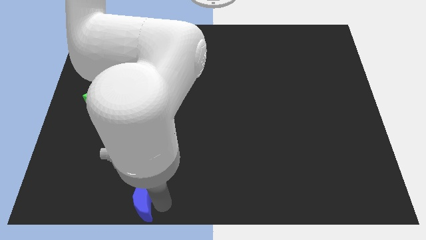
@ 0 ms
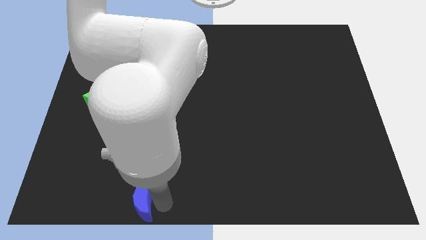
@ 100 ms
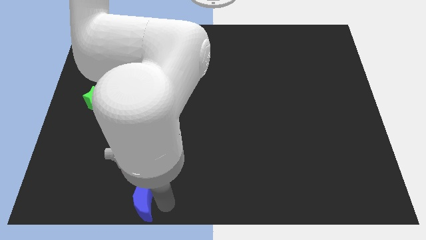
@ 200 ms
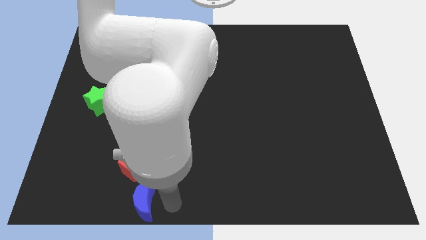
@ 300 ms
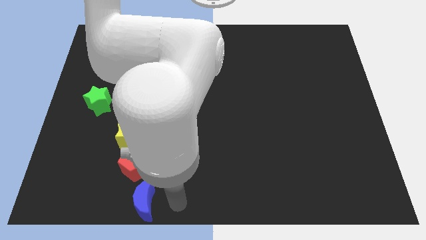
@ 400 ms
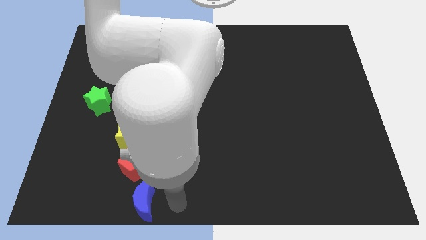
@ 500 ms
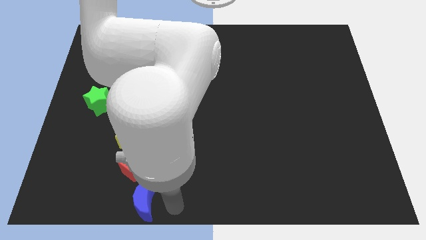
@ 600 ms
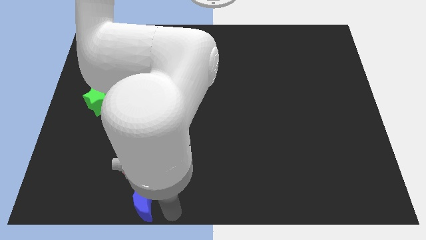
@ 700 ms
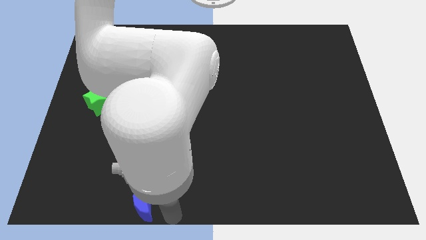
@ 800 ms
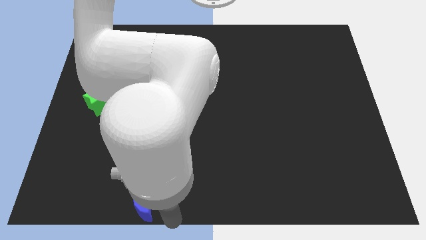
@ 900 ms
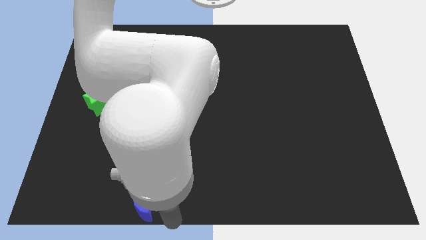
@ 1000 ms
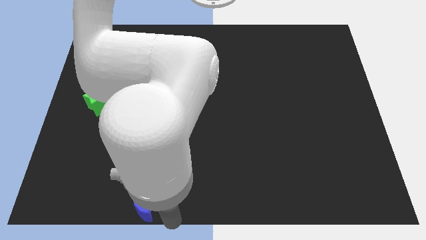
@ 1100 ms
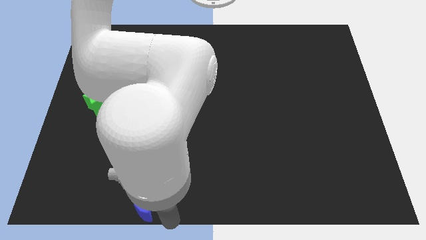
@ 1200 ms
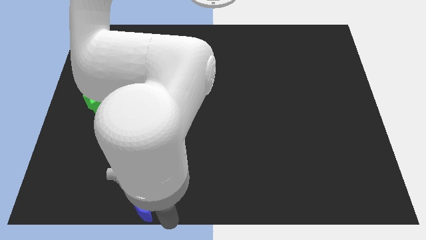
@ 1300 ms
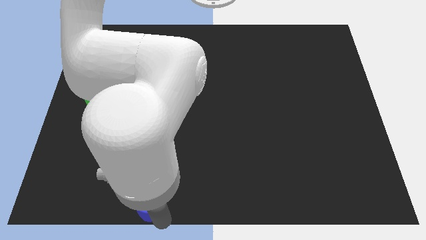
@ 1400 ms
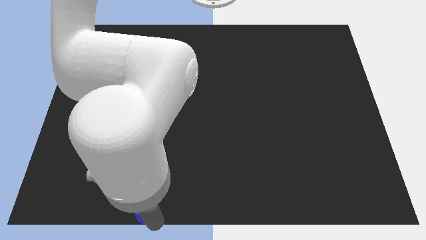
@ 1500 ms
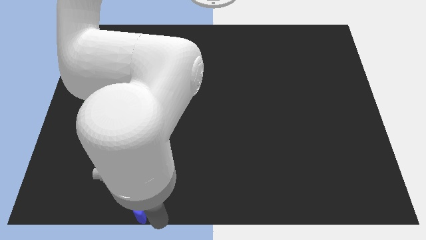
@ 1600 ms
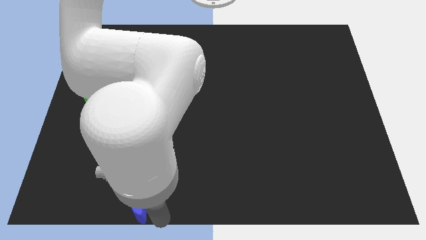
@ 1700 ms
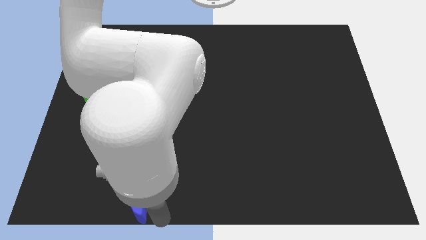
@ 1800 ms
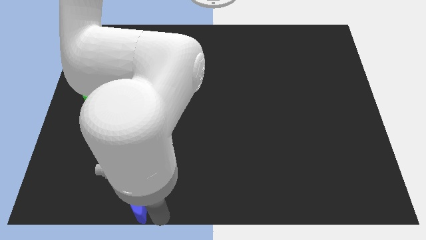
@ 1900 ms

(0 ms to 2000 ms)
place the blue moon to the bottom of the red pentagon

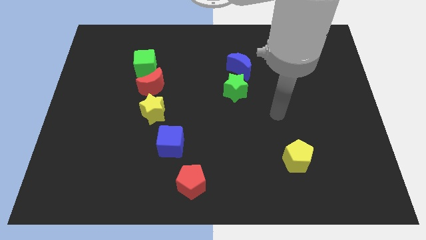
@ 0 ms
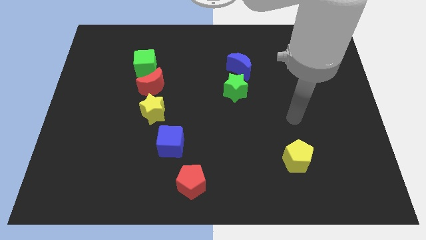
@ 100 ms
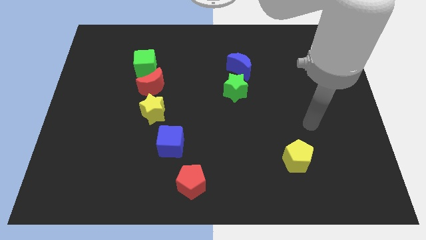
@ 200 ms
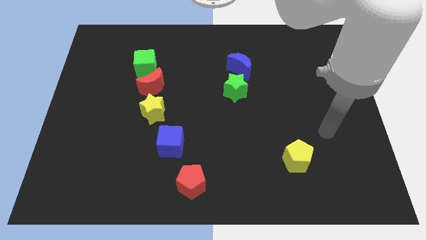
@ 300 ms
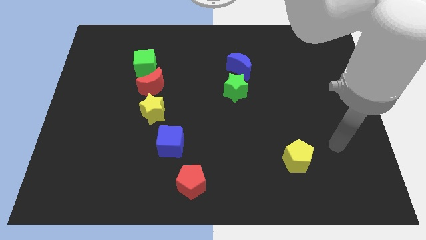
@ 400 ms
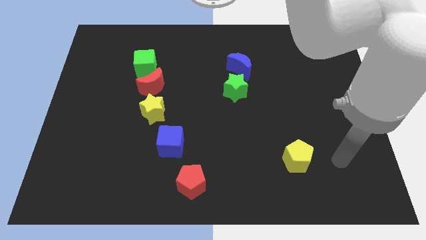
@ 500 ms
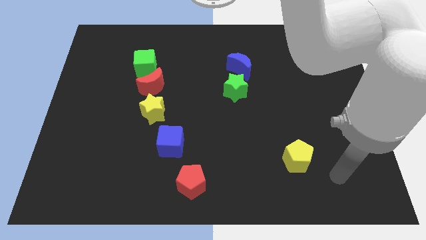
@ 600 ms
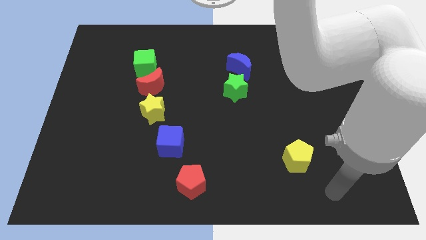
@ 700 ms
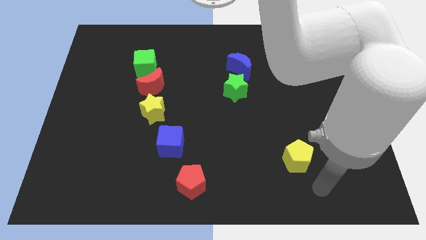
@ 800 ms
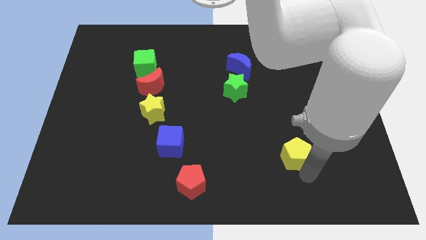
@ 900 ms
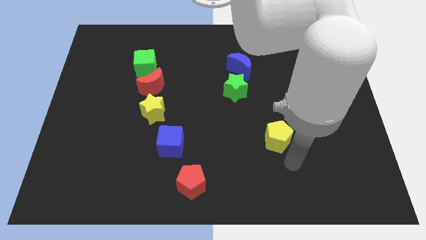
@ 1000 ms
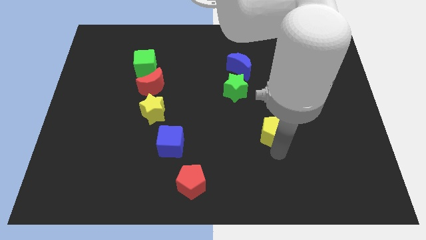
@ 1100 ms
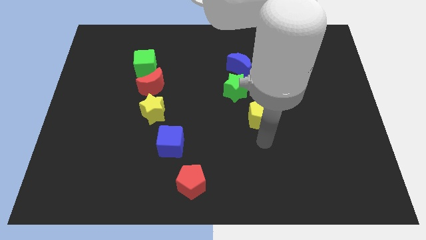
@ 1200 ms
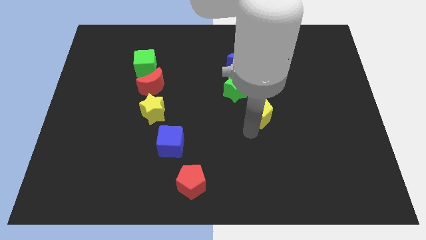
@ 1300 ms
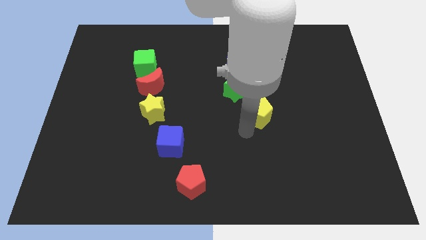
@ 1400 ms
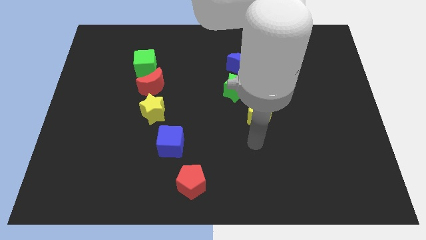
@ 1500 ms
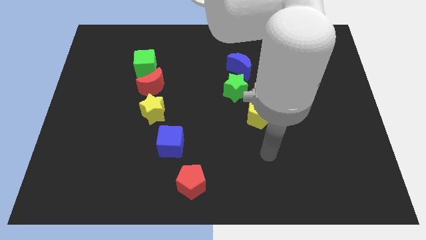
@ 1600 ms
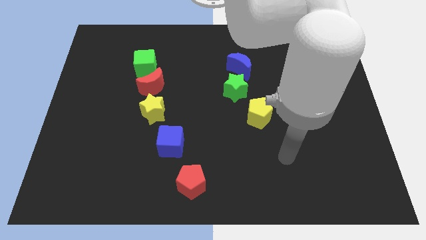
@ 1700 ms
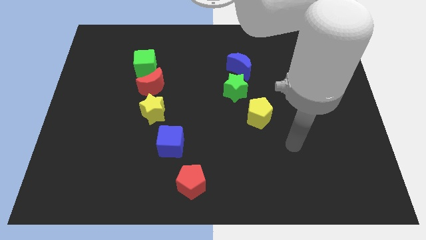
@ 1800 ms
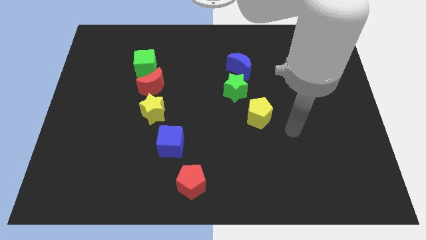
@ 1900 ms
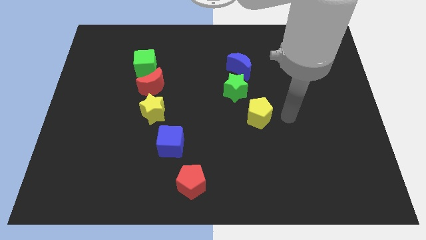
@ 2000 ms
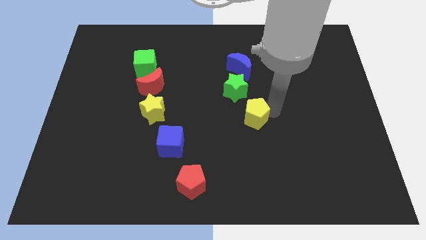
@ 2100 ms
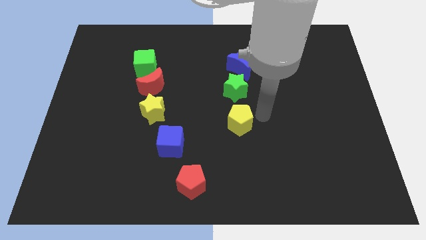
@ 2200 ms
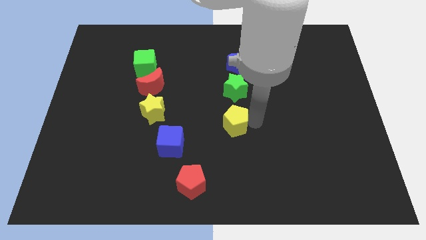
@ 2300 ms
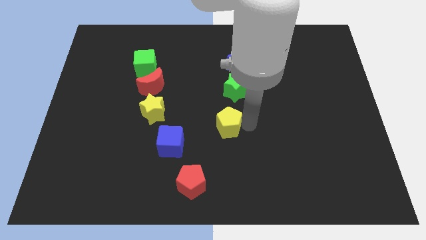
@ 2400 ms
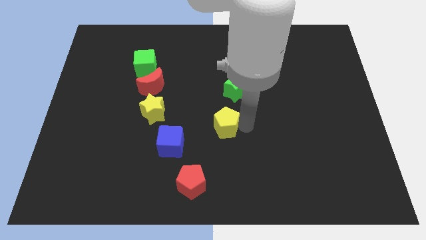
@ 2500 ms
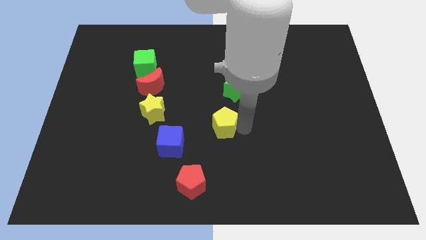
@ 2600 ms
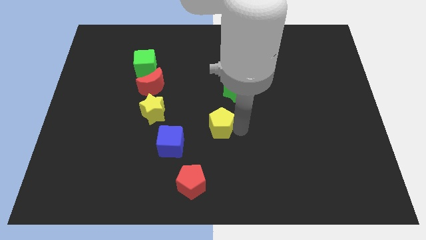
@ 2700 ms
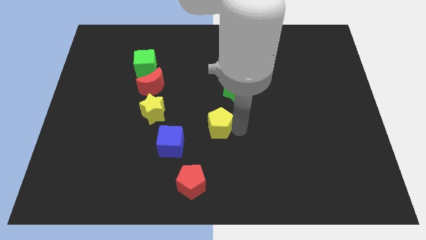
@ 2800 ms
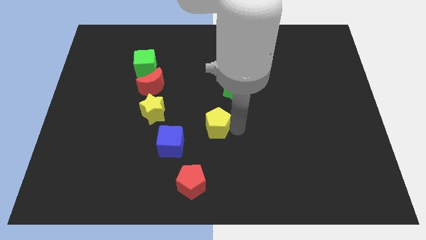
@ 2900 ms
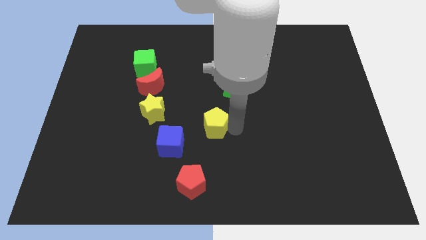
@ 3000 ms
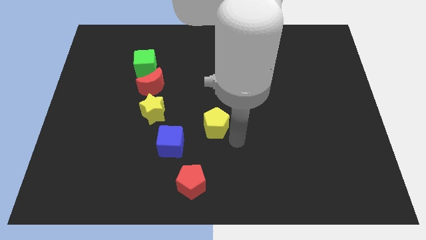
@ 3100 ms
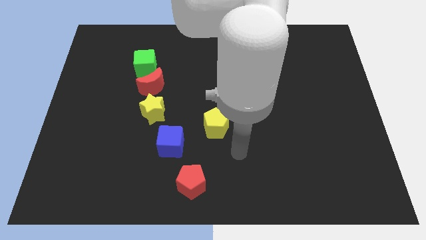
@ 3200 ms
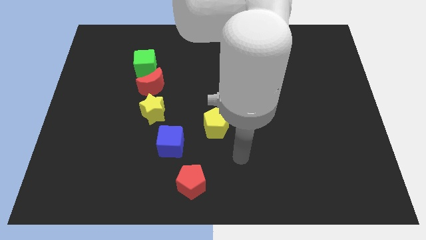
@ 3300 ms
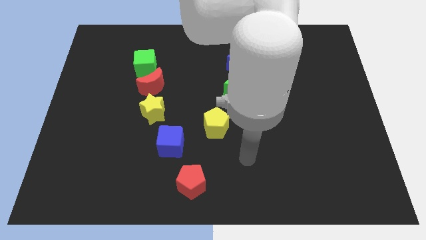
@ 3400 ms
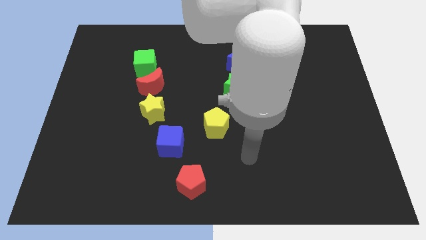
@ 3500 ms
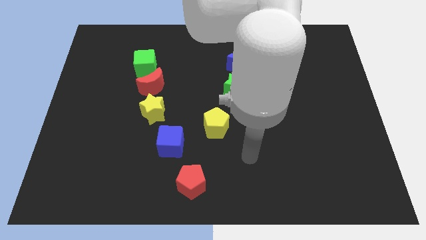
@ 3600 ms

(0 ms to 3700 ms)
push the yellow pentagon to the center of the board

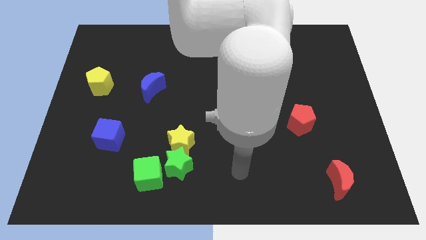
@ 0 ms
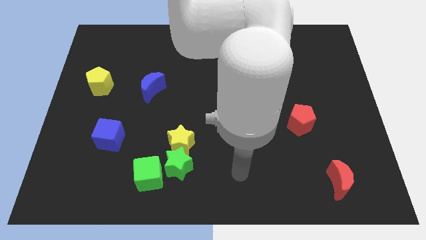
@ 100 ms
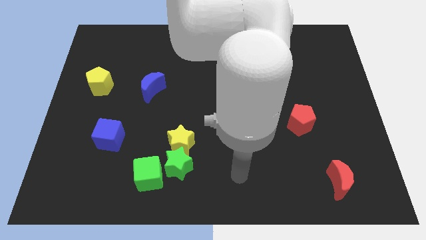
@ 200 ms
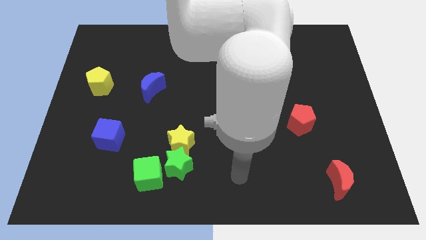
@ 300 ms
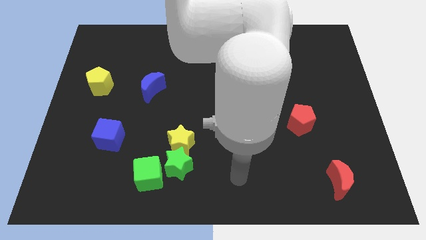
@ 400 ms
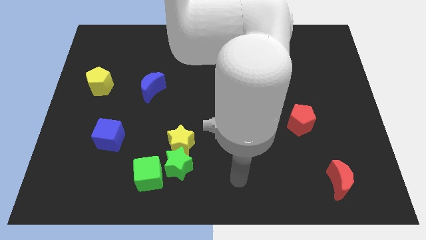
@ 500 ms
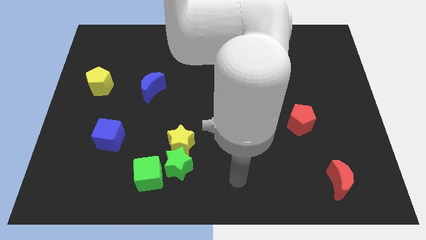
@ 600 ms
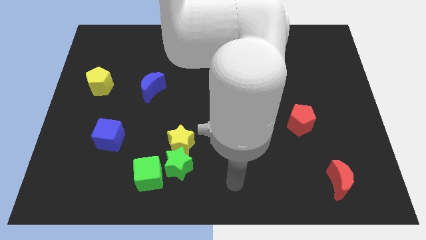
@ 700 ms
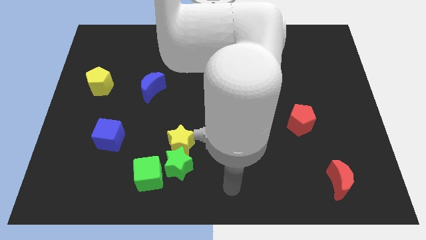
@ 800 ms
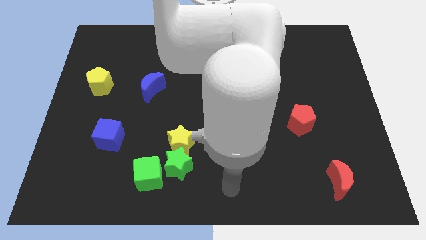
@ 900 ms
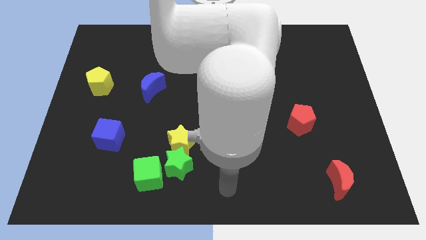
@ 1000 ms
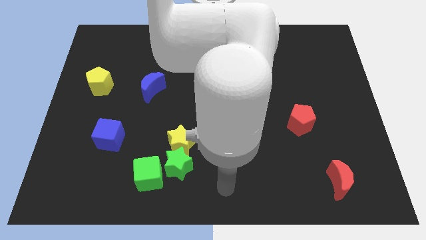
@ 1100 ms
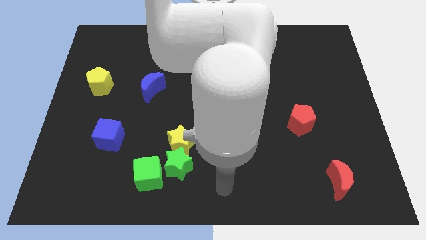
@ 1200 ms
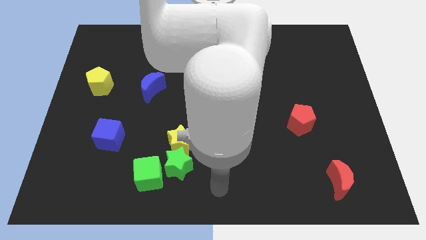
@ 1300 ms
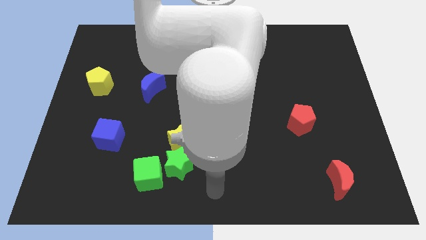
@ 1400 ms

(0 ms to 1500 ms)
move the arm near to the bottom center of the board

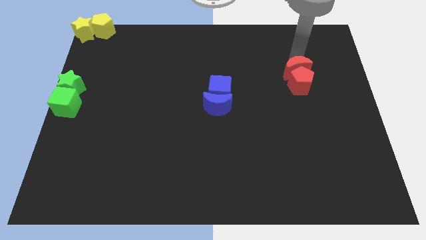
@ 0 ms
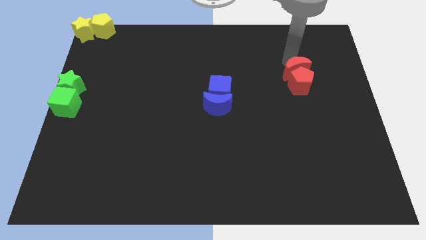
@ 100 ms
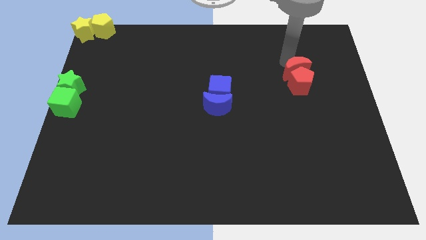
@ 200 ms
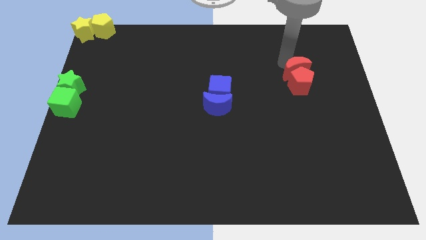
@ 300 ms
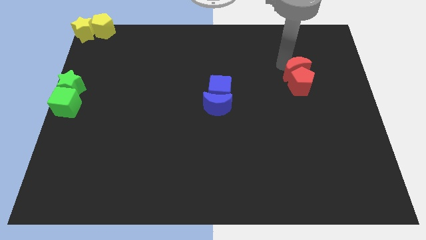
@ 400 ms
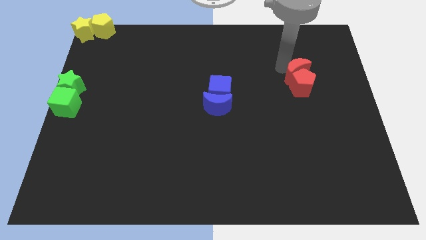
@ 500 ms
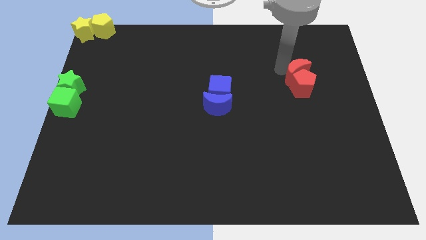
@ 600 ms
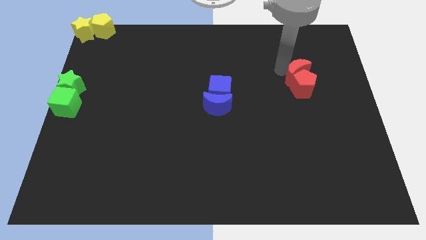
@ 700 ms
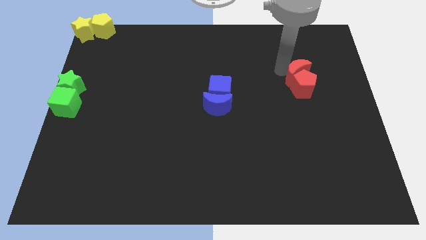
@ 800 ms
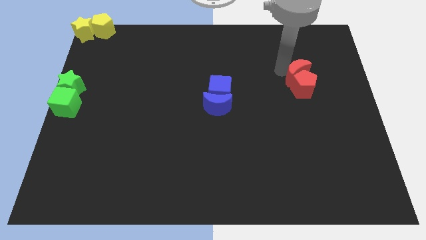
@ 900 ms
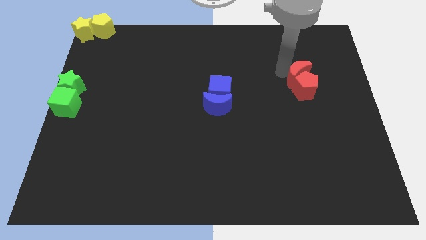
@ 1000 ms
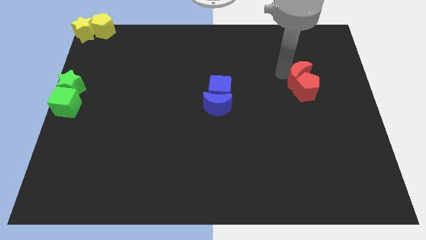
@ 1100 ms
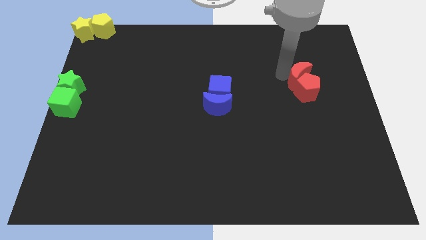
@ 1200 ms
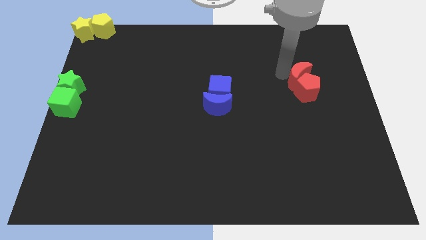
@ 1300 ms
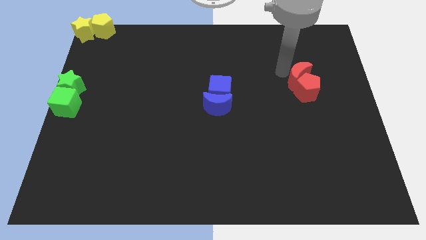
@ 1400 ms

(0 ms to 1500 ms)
slightly push the red blocks towards the bottom side of the board

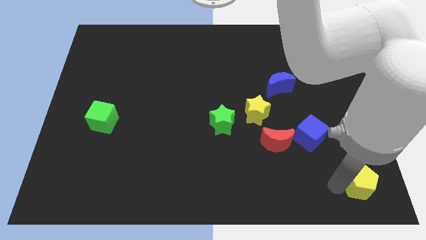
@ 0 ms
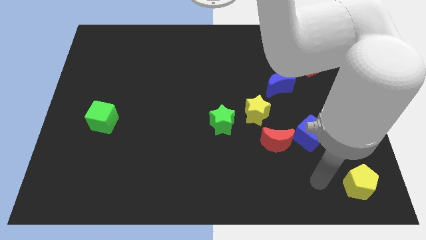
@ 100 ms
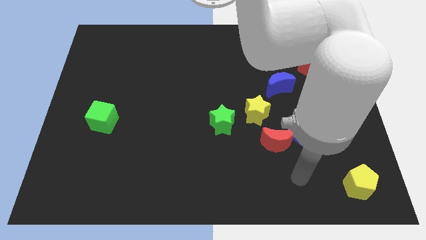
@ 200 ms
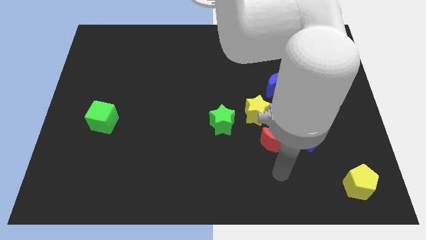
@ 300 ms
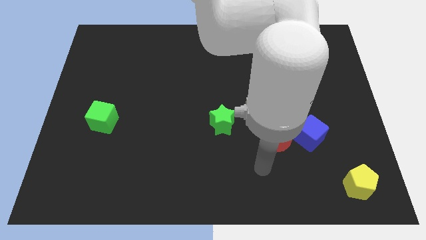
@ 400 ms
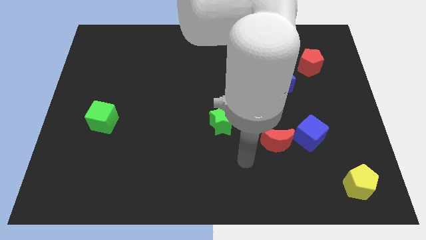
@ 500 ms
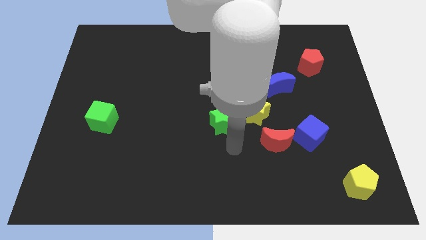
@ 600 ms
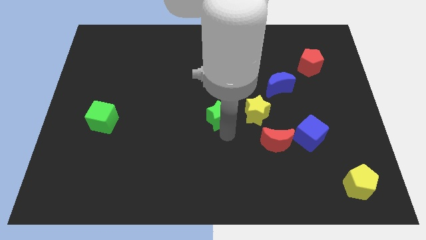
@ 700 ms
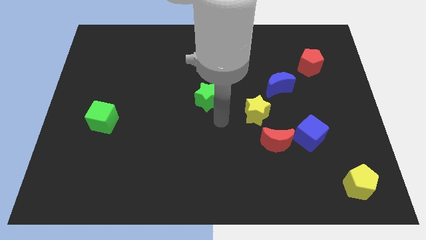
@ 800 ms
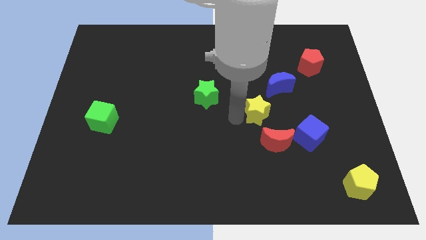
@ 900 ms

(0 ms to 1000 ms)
slide the green star towards up
